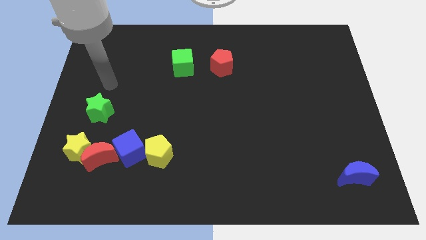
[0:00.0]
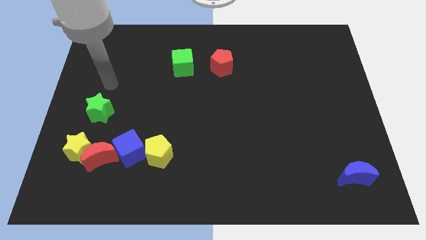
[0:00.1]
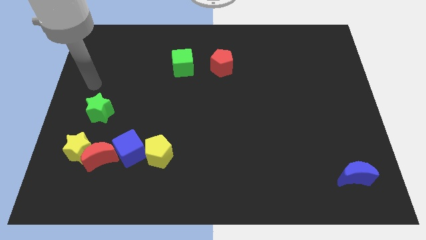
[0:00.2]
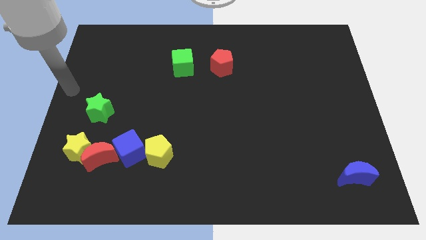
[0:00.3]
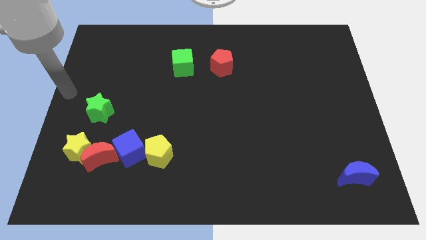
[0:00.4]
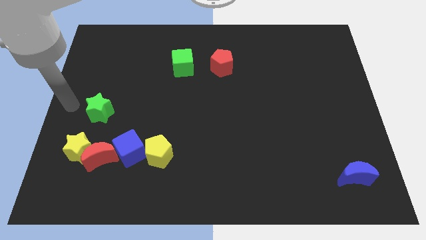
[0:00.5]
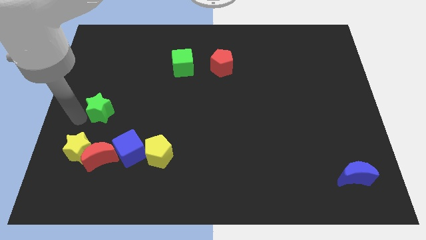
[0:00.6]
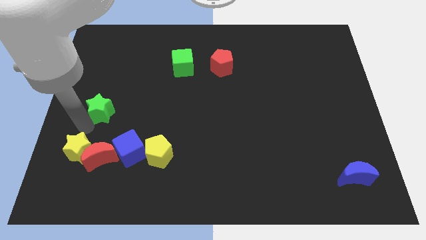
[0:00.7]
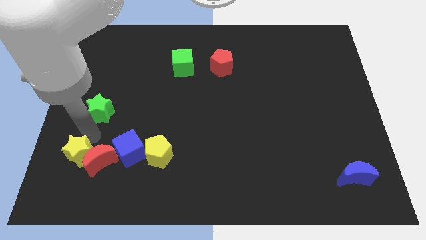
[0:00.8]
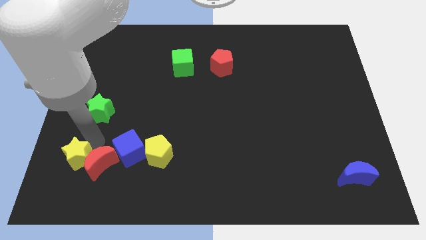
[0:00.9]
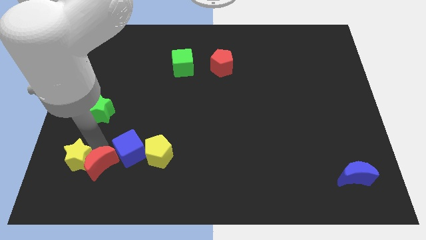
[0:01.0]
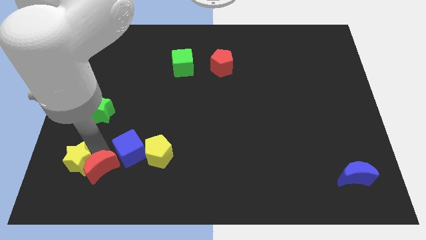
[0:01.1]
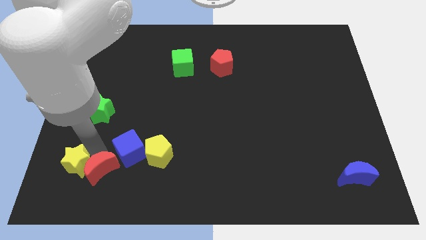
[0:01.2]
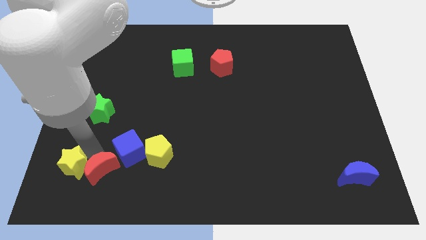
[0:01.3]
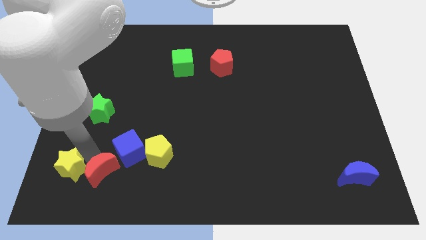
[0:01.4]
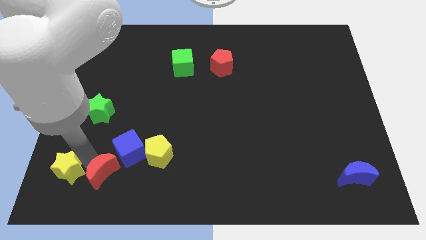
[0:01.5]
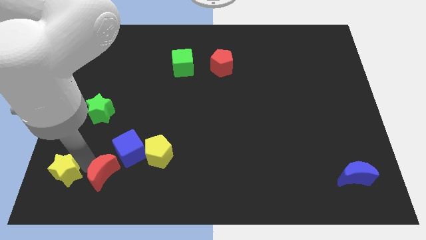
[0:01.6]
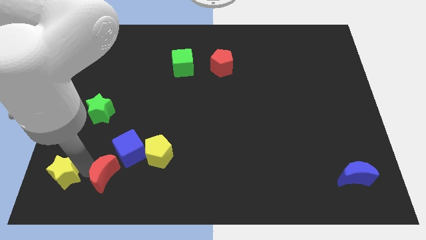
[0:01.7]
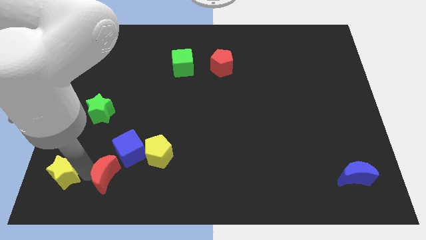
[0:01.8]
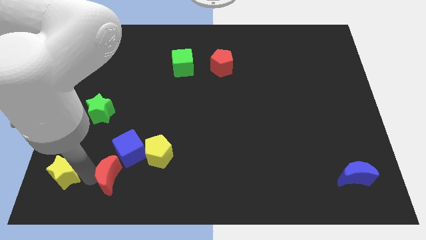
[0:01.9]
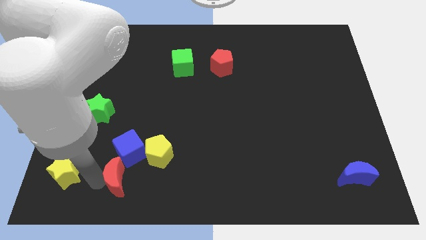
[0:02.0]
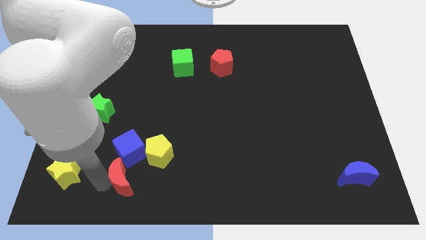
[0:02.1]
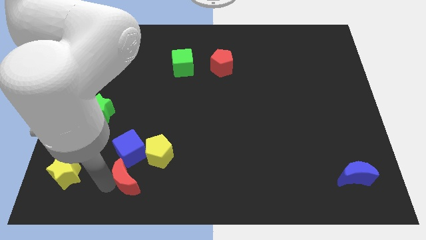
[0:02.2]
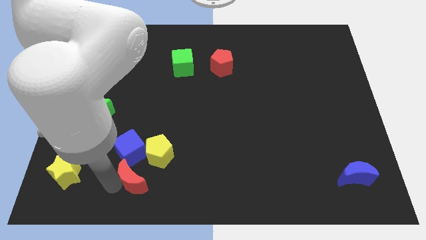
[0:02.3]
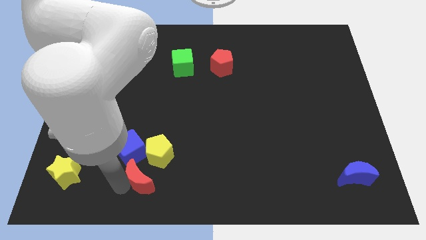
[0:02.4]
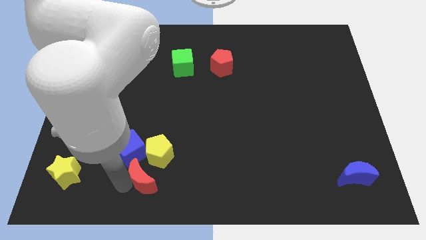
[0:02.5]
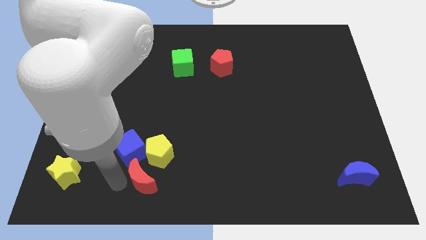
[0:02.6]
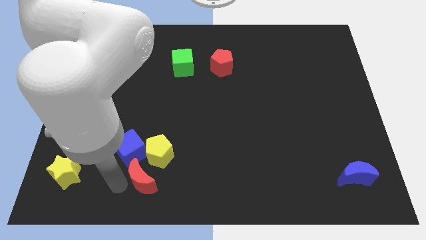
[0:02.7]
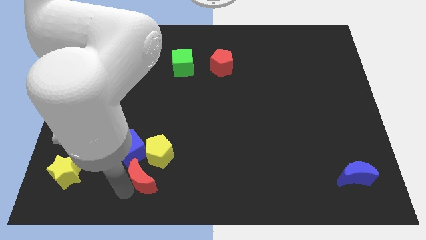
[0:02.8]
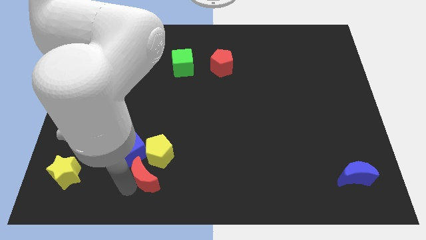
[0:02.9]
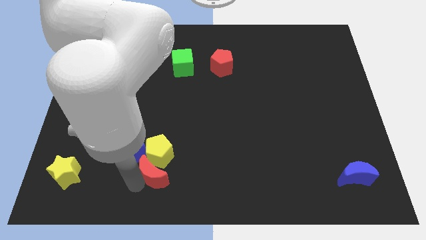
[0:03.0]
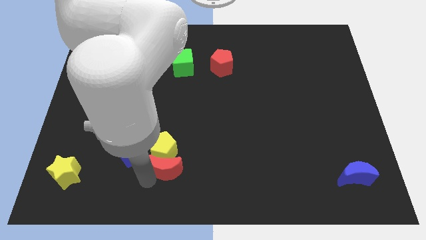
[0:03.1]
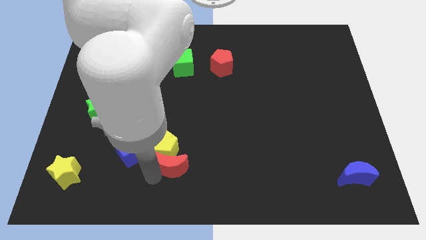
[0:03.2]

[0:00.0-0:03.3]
put the red moon next to the yellow pentagon

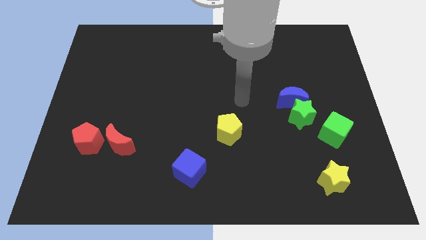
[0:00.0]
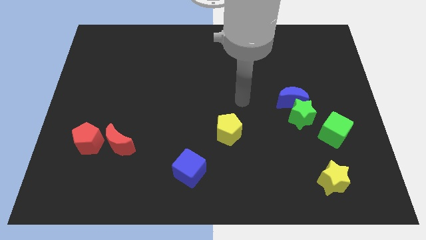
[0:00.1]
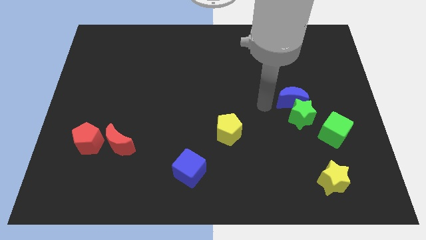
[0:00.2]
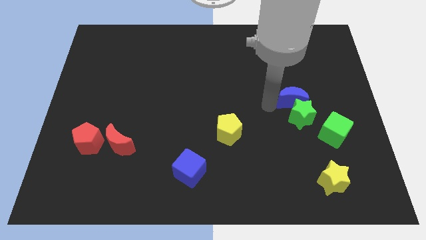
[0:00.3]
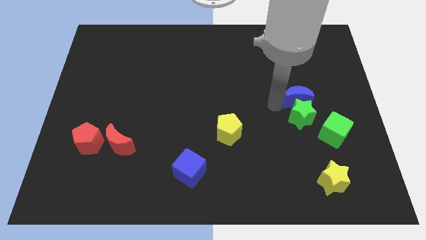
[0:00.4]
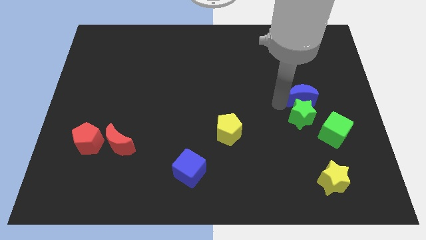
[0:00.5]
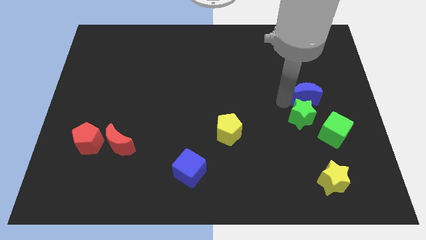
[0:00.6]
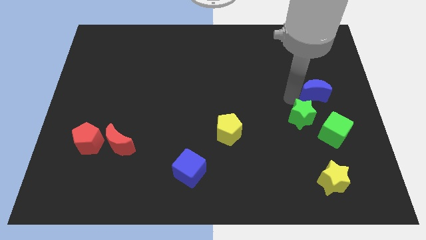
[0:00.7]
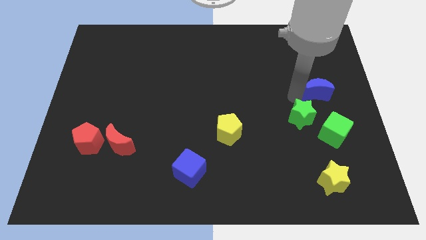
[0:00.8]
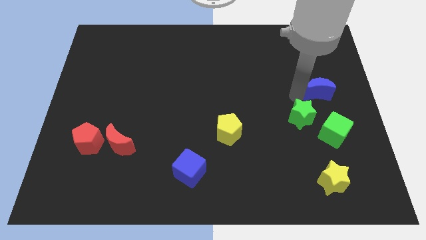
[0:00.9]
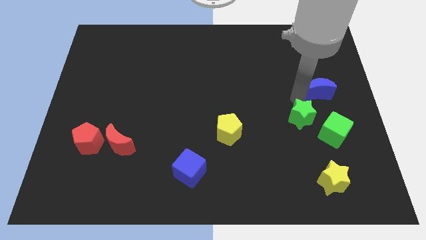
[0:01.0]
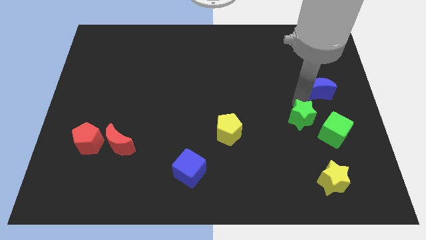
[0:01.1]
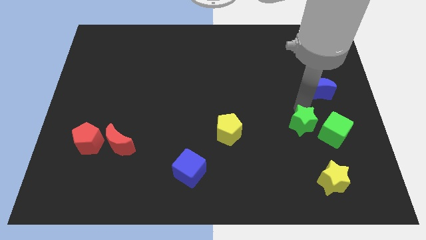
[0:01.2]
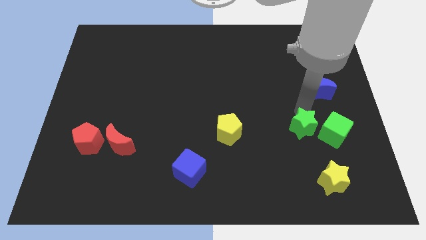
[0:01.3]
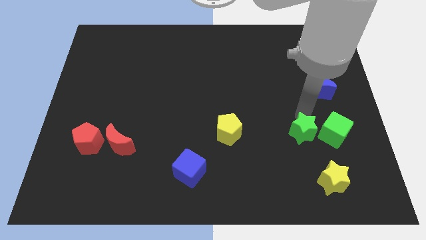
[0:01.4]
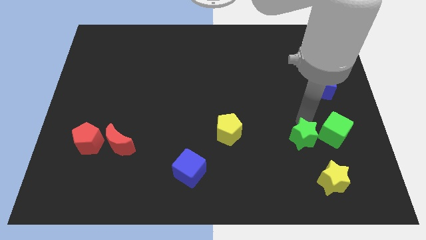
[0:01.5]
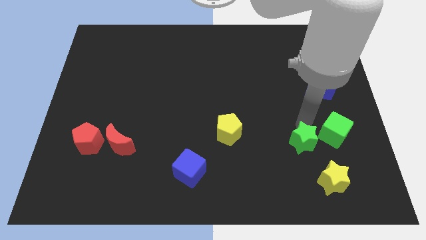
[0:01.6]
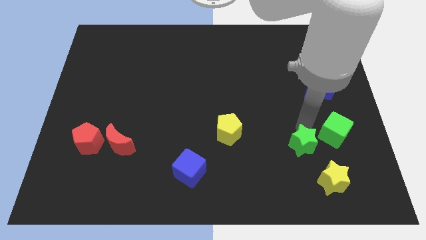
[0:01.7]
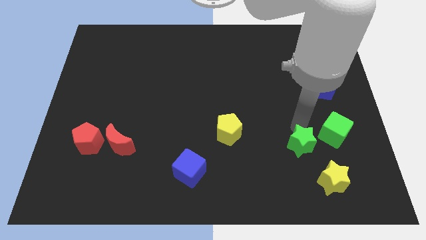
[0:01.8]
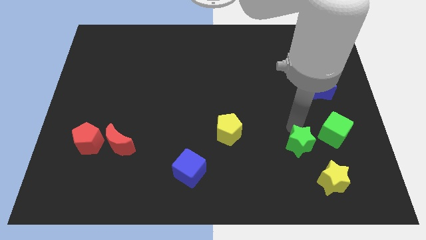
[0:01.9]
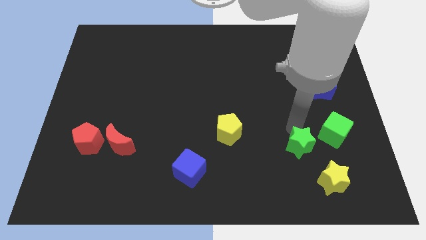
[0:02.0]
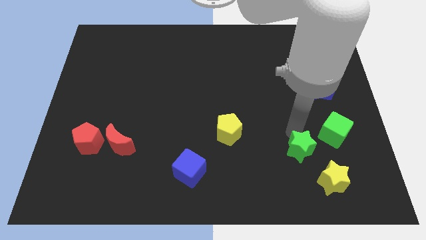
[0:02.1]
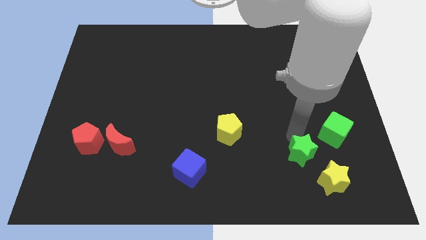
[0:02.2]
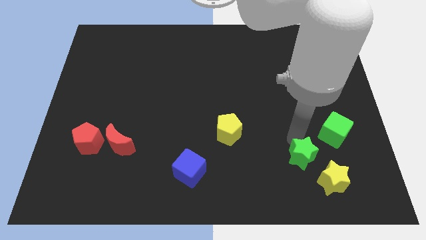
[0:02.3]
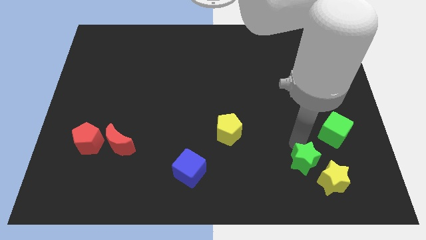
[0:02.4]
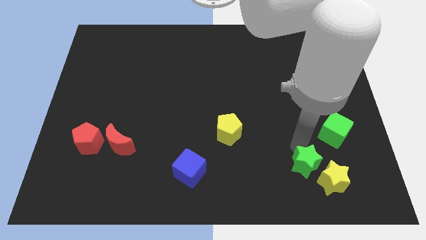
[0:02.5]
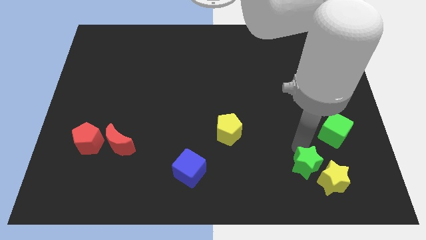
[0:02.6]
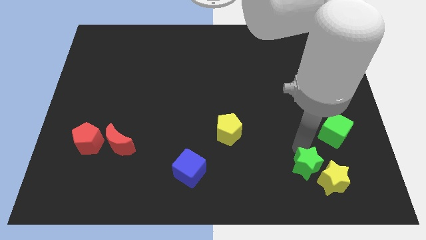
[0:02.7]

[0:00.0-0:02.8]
slide the green star next to the yellow star

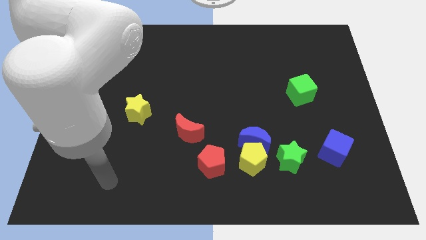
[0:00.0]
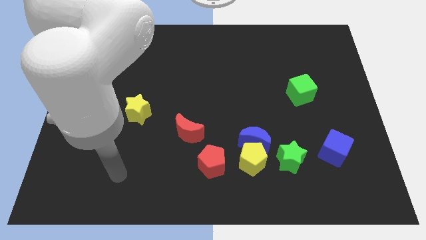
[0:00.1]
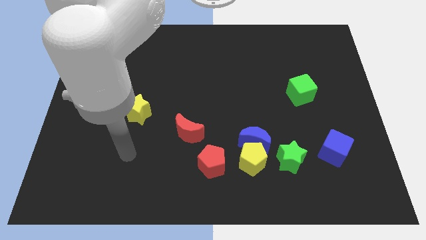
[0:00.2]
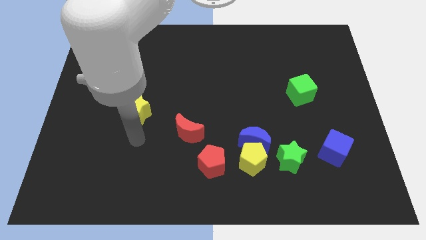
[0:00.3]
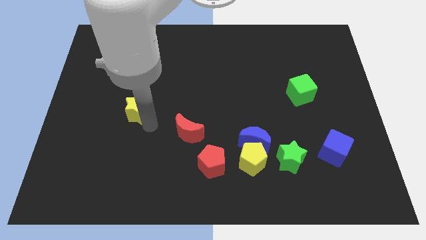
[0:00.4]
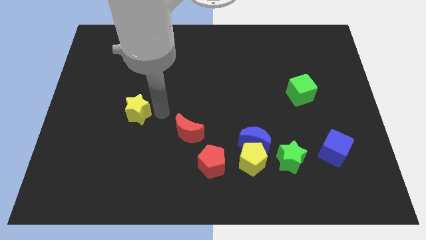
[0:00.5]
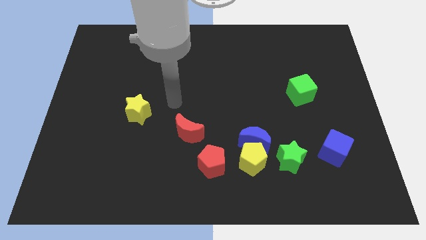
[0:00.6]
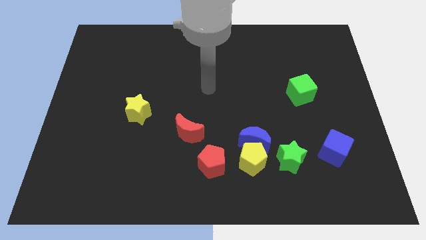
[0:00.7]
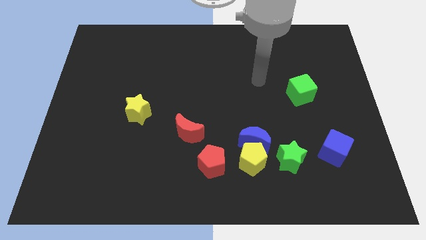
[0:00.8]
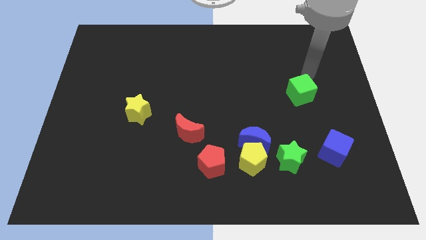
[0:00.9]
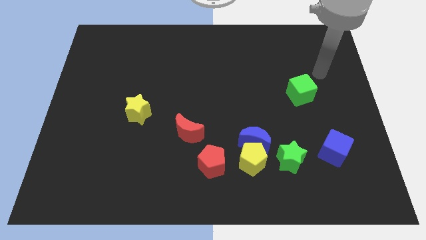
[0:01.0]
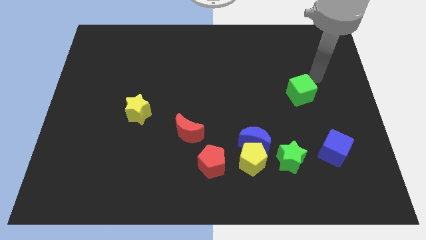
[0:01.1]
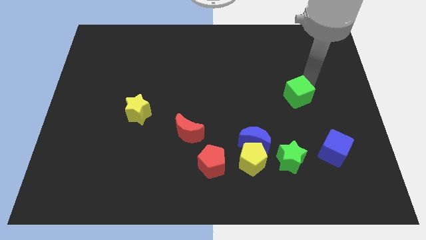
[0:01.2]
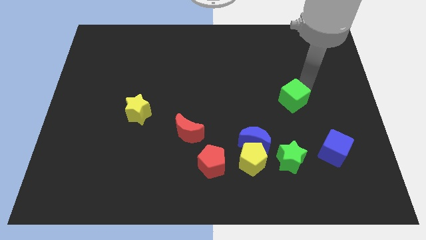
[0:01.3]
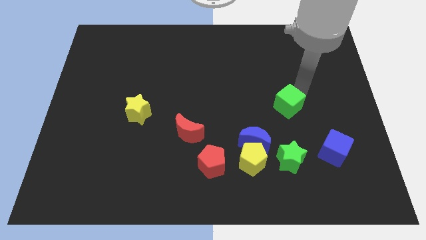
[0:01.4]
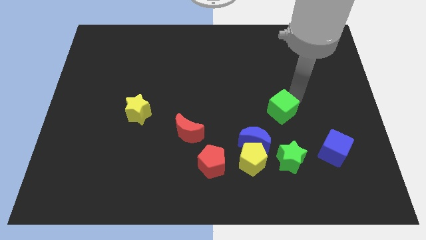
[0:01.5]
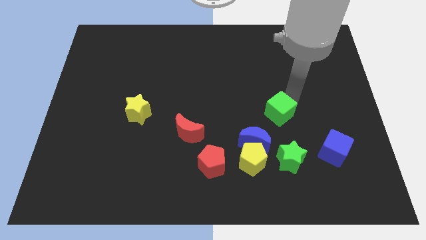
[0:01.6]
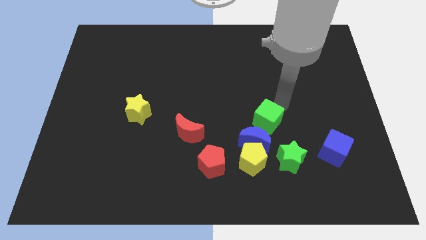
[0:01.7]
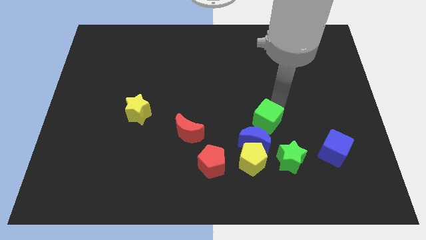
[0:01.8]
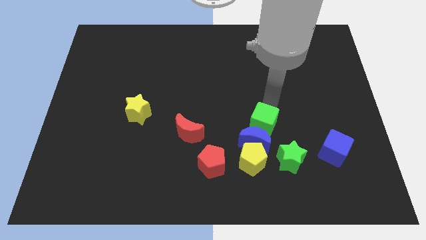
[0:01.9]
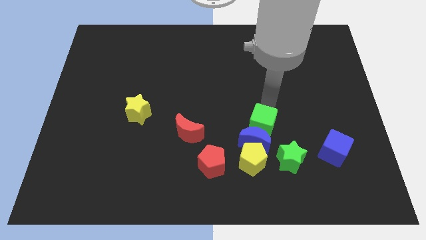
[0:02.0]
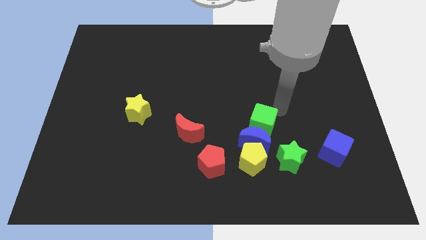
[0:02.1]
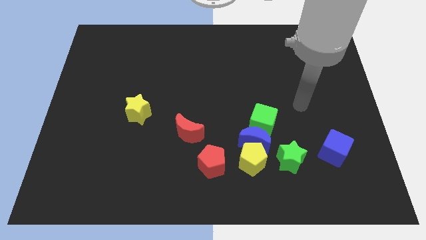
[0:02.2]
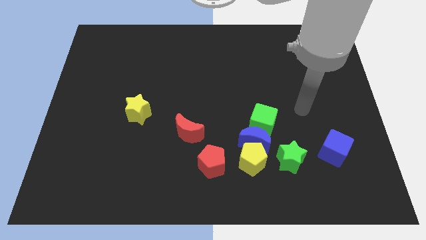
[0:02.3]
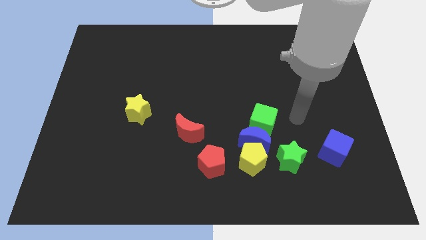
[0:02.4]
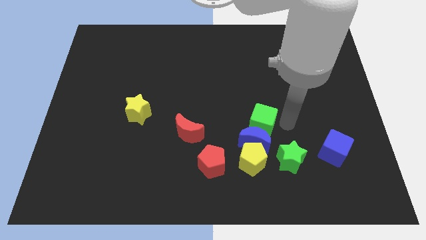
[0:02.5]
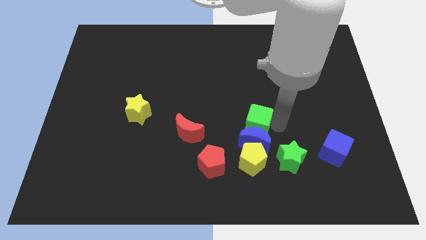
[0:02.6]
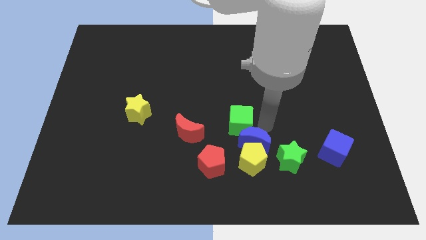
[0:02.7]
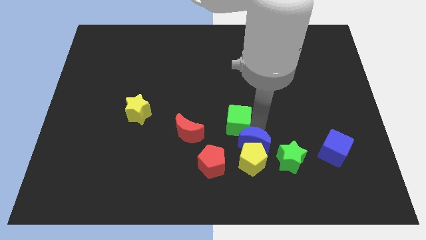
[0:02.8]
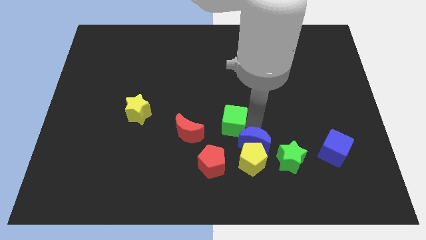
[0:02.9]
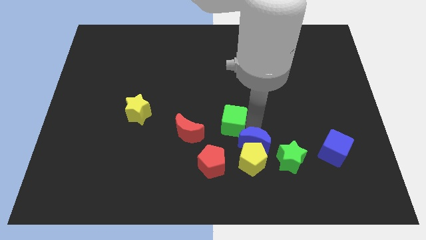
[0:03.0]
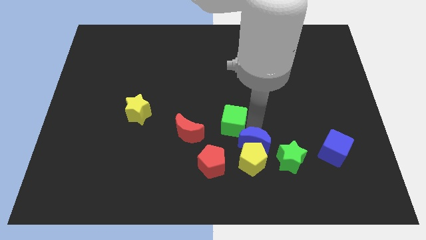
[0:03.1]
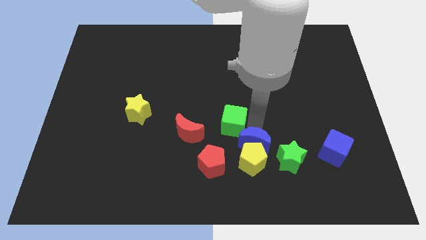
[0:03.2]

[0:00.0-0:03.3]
move the green cube towards the red pentagon
